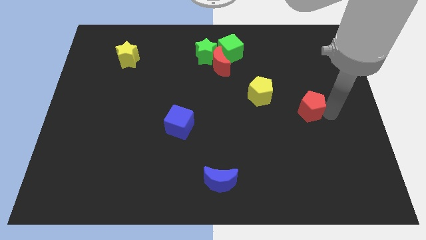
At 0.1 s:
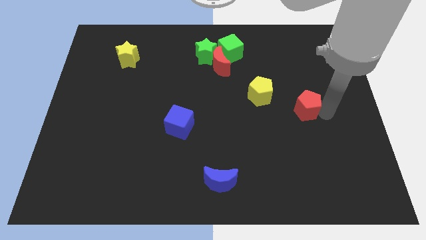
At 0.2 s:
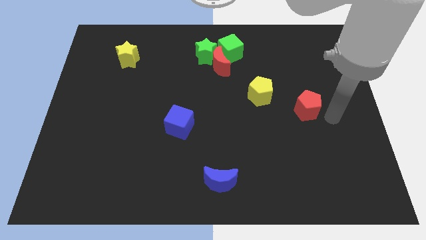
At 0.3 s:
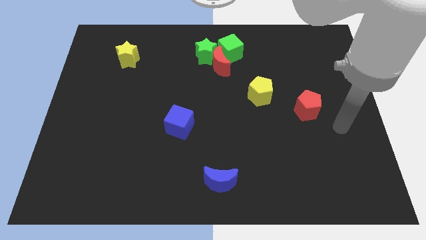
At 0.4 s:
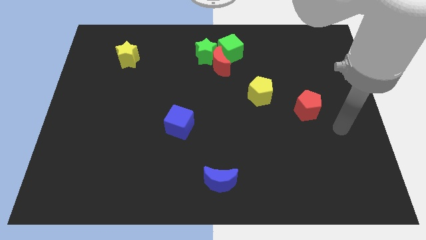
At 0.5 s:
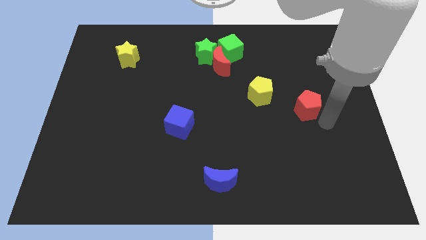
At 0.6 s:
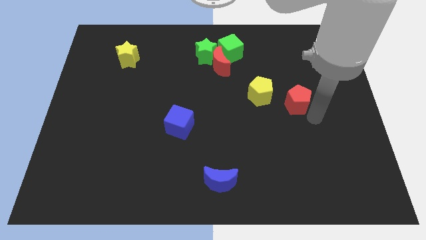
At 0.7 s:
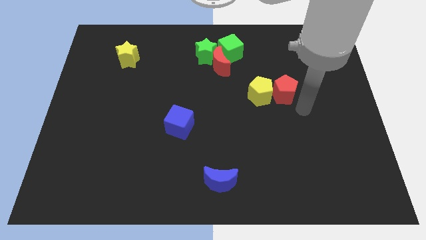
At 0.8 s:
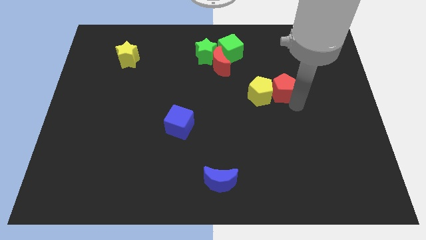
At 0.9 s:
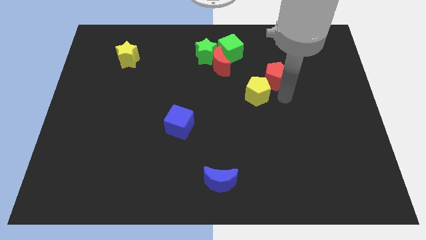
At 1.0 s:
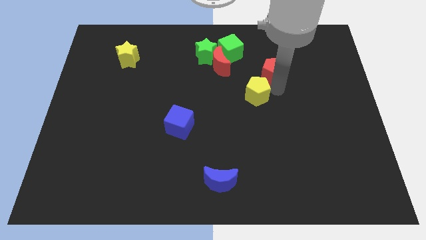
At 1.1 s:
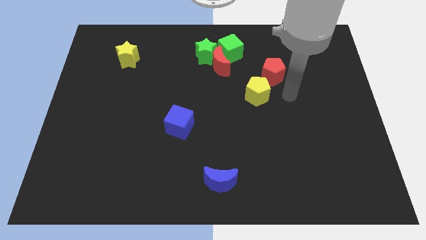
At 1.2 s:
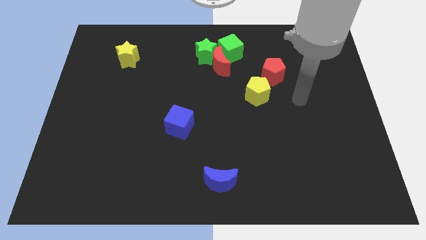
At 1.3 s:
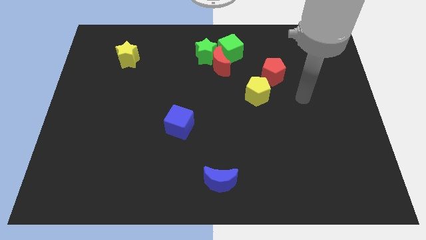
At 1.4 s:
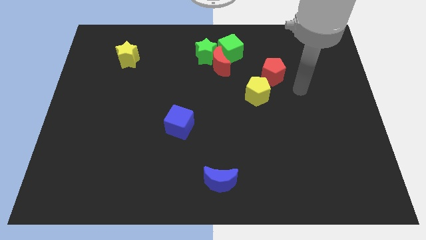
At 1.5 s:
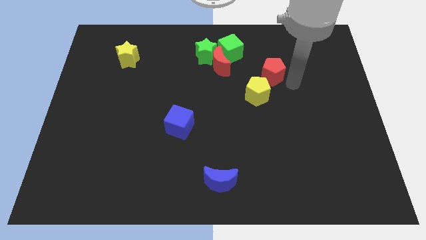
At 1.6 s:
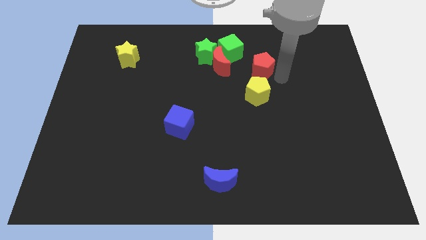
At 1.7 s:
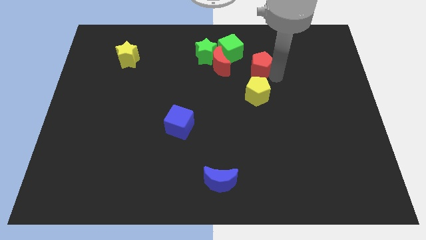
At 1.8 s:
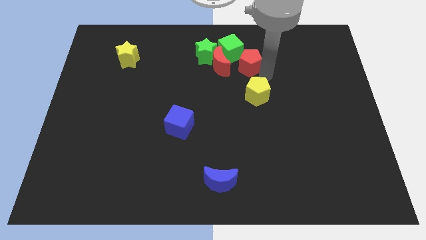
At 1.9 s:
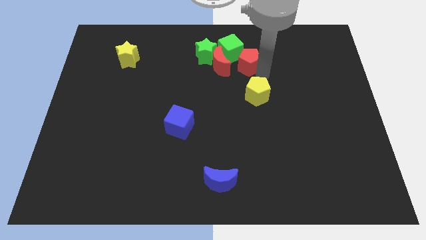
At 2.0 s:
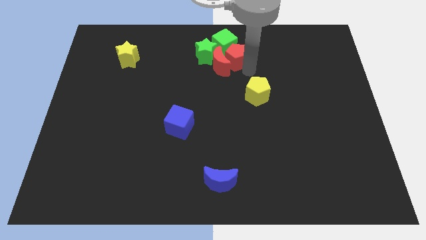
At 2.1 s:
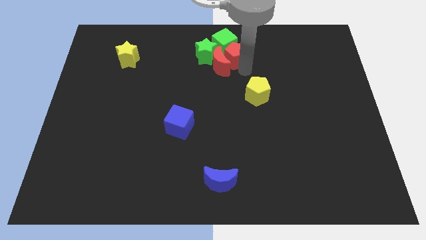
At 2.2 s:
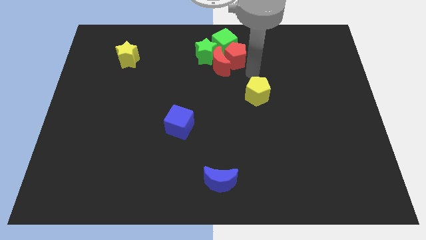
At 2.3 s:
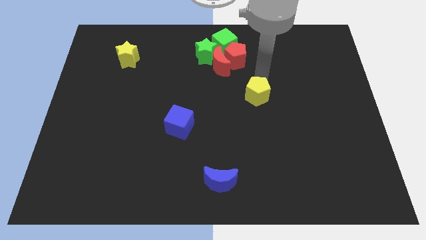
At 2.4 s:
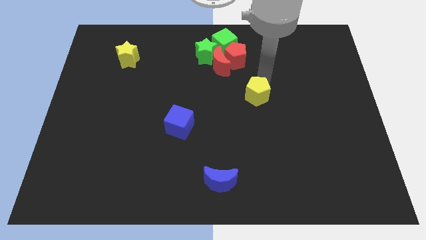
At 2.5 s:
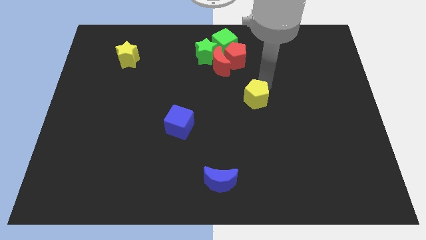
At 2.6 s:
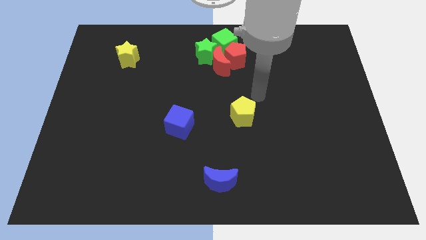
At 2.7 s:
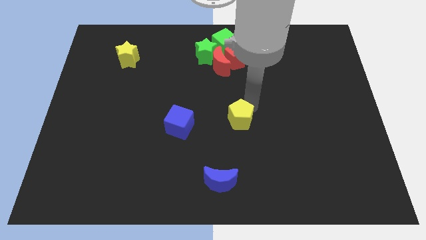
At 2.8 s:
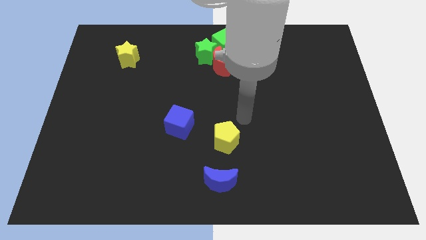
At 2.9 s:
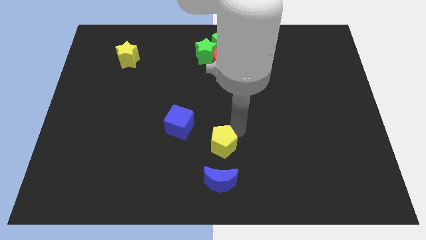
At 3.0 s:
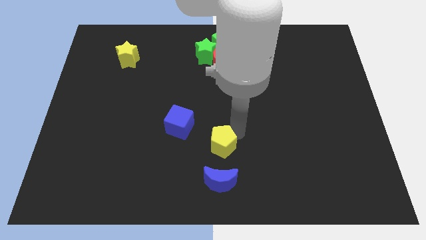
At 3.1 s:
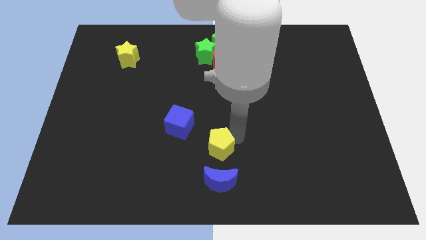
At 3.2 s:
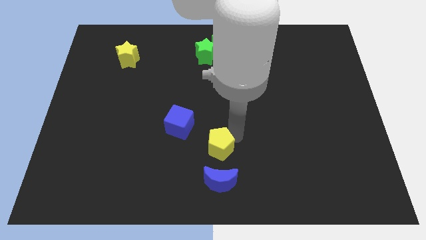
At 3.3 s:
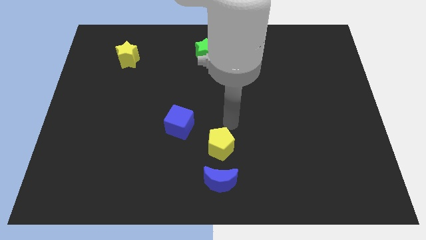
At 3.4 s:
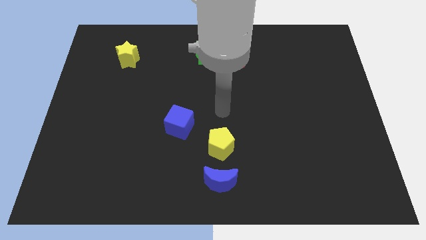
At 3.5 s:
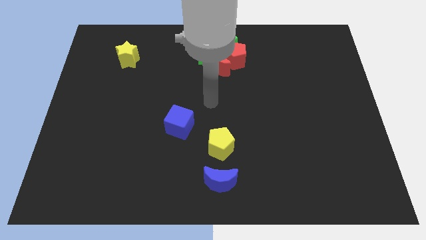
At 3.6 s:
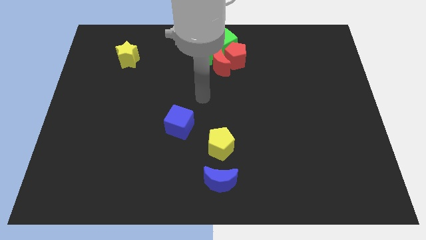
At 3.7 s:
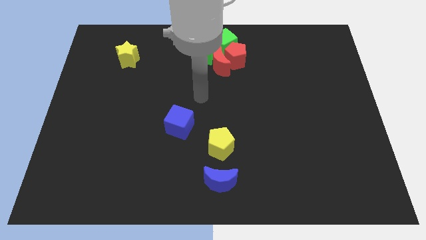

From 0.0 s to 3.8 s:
separate red pentagon and yellow pentagon from each other

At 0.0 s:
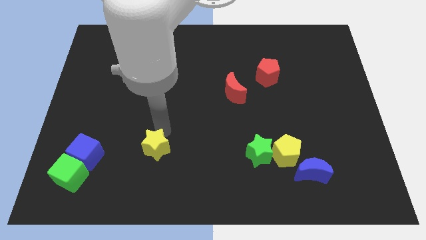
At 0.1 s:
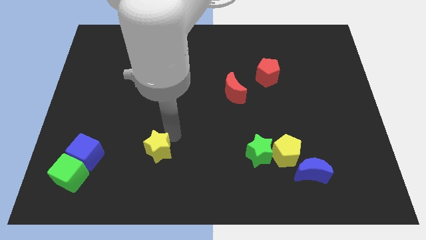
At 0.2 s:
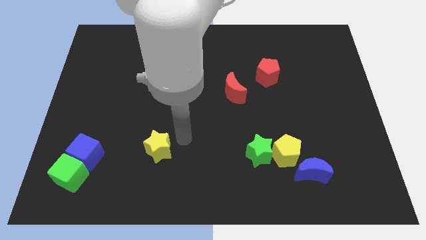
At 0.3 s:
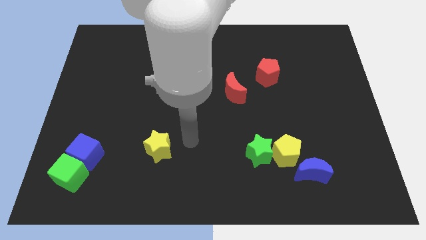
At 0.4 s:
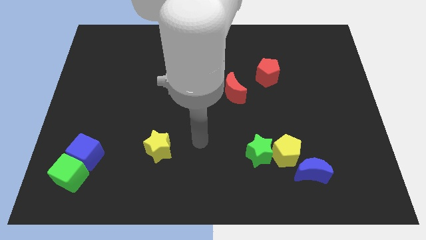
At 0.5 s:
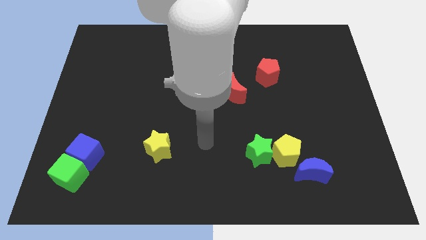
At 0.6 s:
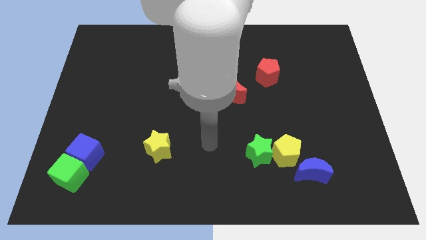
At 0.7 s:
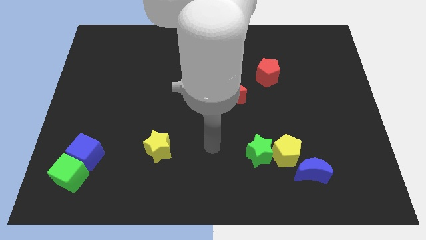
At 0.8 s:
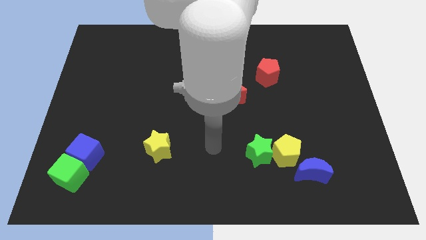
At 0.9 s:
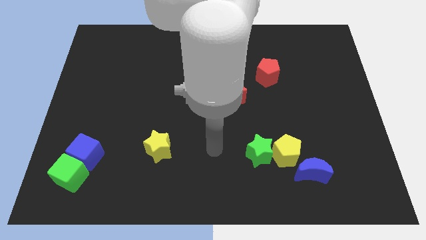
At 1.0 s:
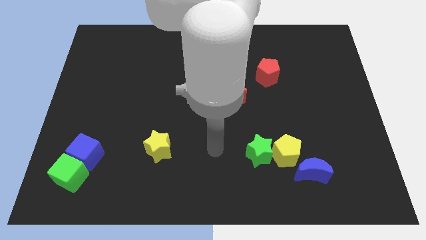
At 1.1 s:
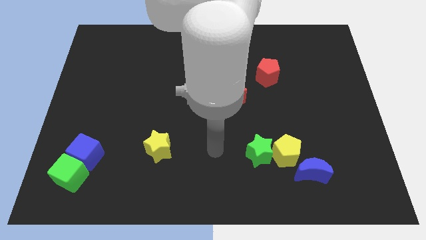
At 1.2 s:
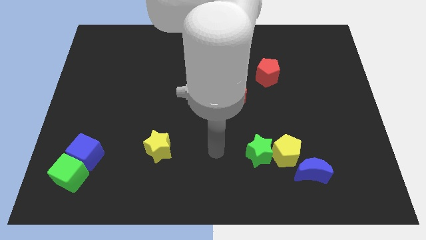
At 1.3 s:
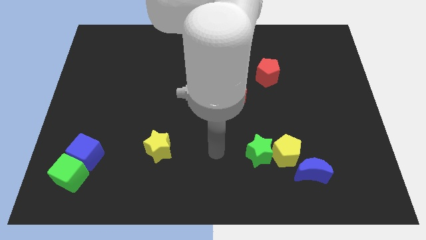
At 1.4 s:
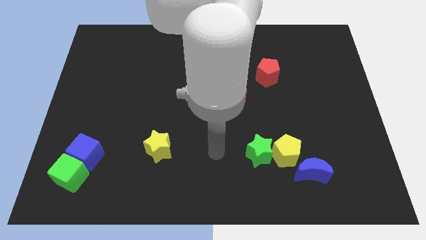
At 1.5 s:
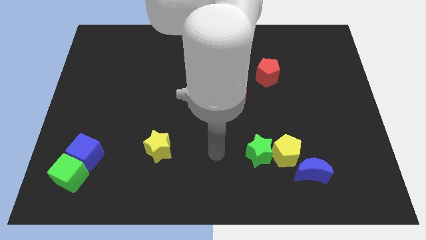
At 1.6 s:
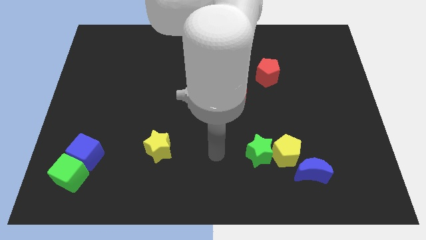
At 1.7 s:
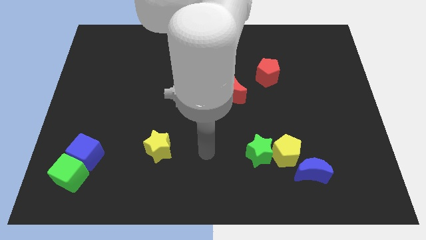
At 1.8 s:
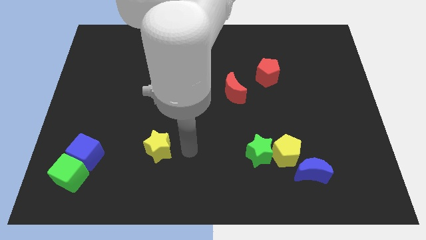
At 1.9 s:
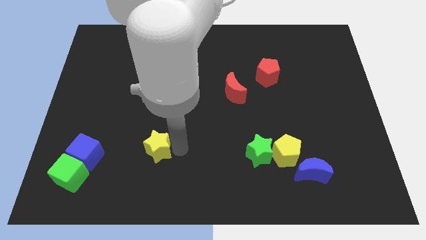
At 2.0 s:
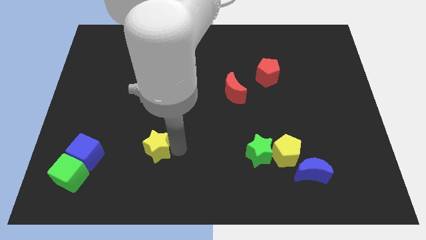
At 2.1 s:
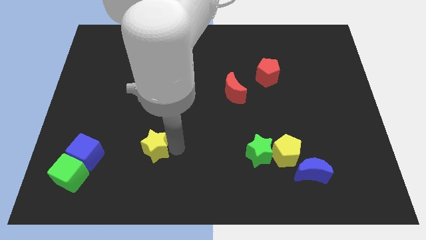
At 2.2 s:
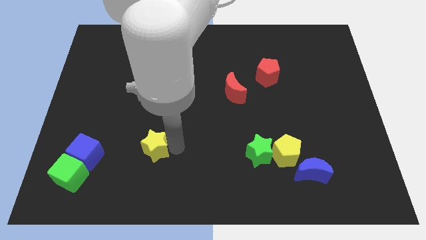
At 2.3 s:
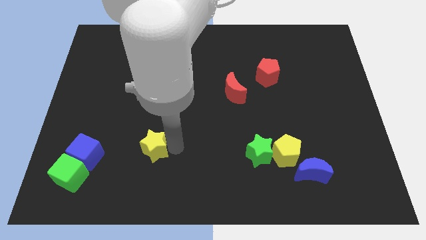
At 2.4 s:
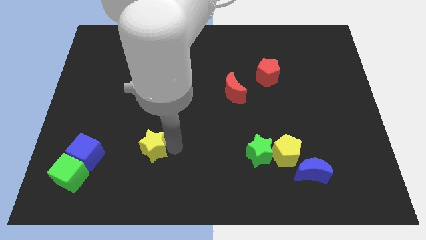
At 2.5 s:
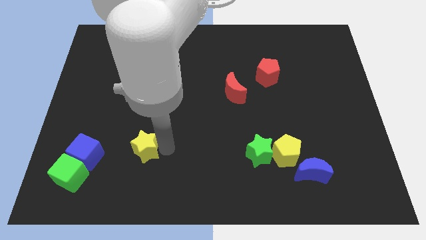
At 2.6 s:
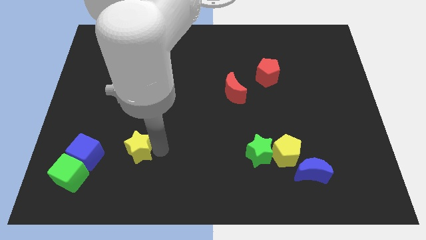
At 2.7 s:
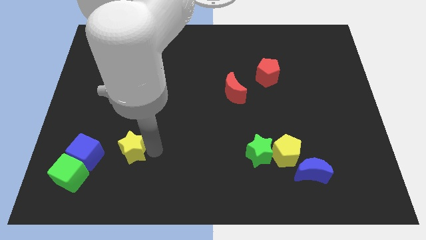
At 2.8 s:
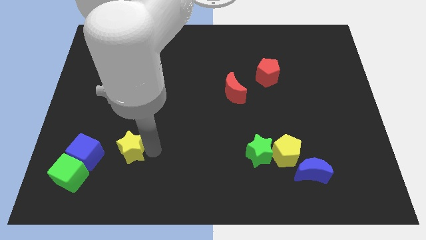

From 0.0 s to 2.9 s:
slide the yellow star towards the blue cube

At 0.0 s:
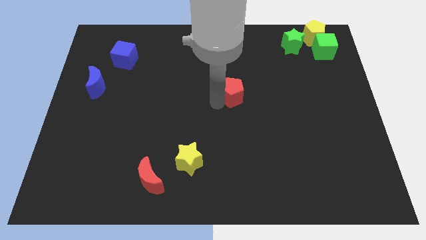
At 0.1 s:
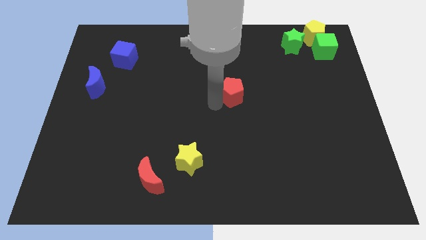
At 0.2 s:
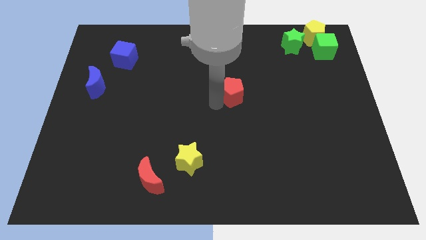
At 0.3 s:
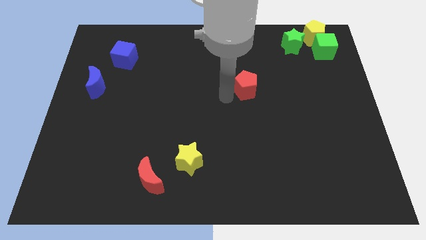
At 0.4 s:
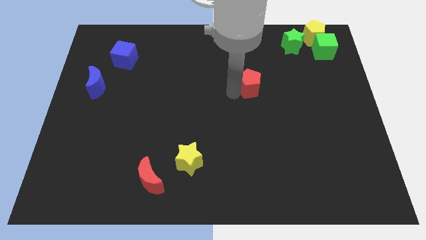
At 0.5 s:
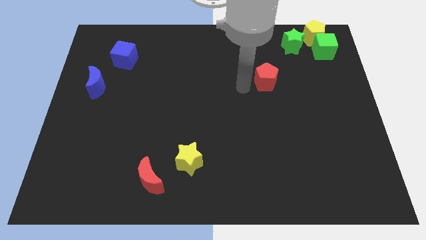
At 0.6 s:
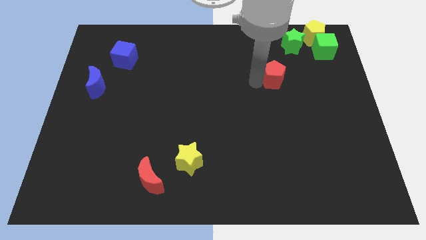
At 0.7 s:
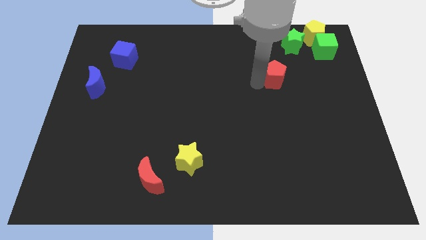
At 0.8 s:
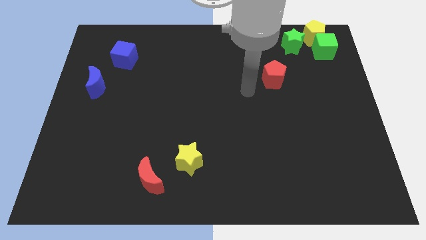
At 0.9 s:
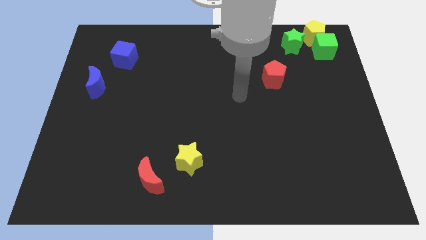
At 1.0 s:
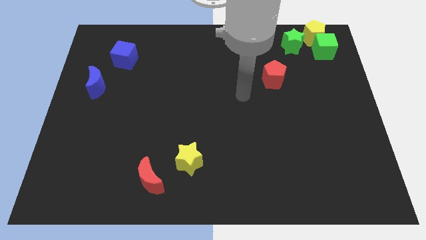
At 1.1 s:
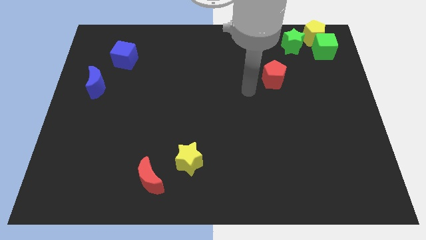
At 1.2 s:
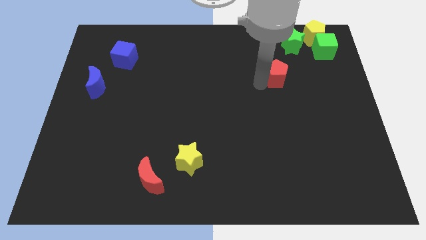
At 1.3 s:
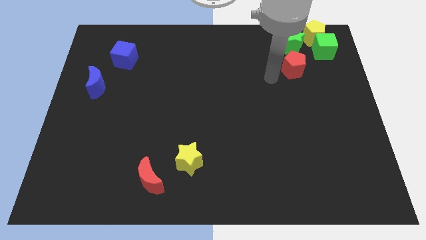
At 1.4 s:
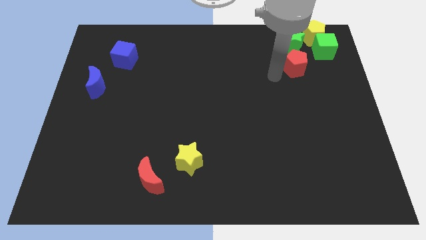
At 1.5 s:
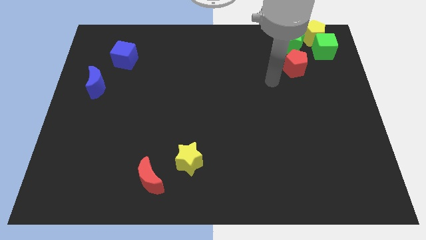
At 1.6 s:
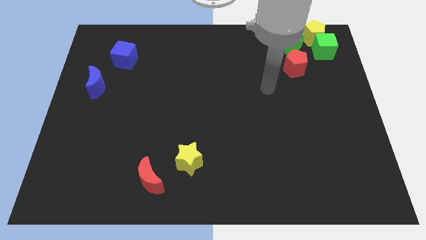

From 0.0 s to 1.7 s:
move the red pentagon towards the green star

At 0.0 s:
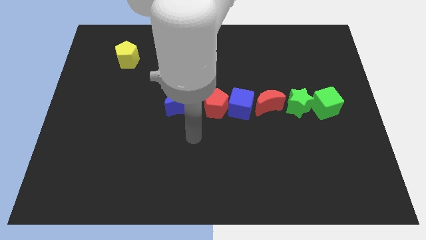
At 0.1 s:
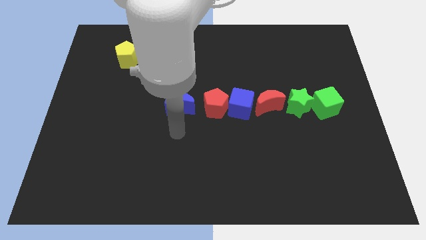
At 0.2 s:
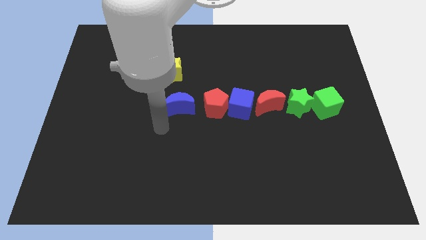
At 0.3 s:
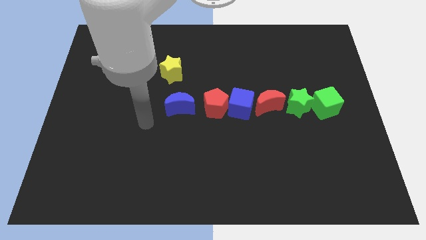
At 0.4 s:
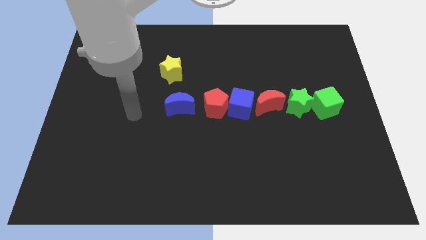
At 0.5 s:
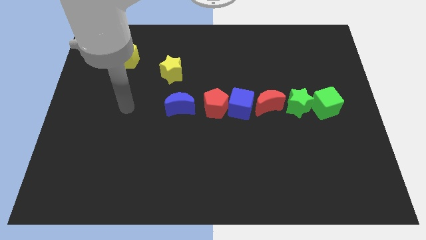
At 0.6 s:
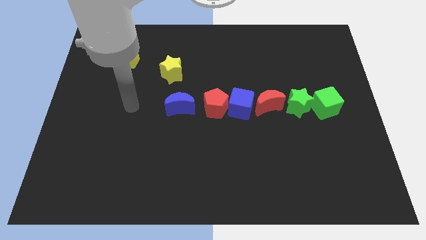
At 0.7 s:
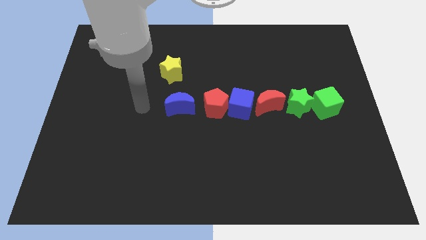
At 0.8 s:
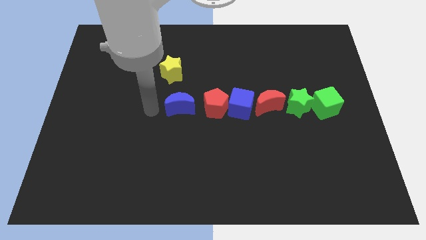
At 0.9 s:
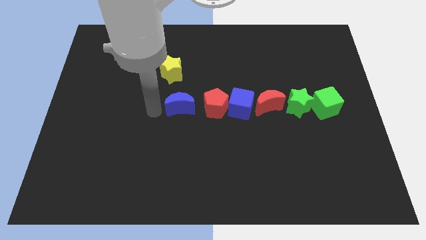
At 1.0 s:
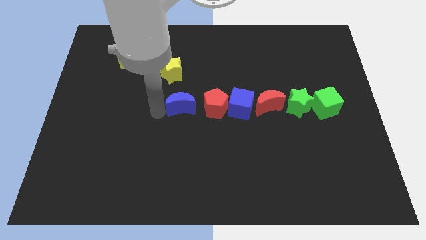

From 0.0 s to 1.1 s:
move your ram close to the blue moon
